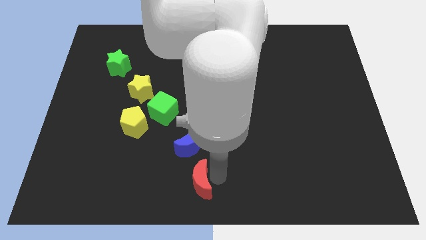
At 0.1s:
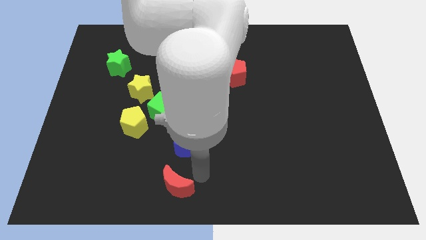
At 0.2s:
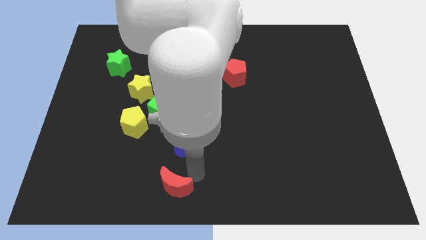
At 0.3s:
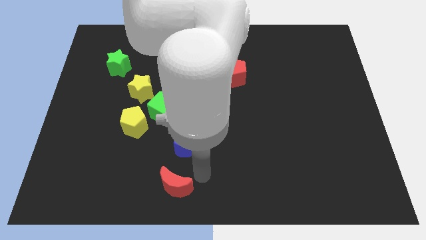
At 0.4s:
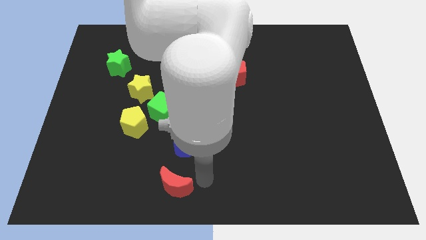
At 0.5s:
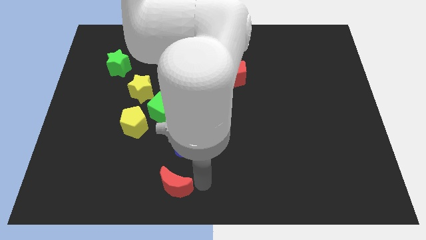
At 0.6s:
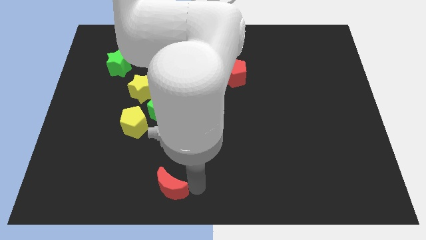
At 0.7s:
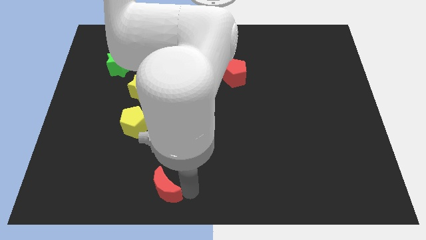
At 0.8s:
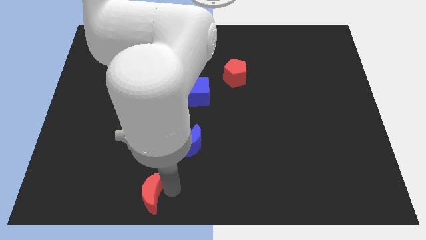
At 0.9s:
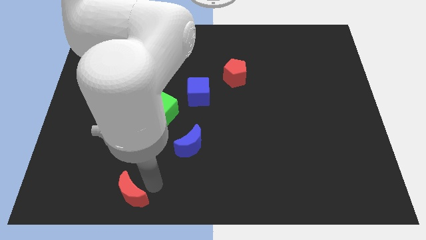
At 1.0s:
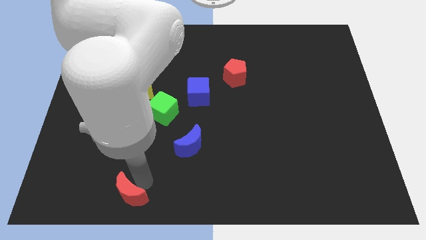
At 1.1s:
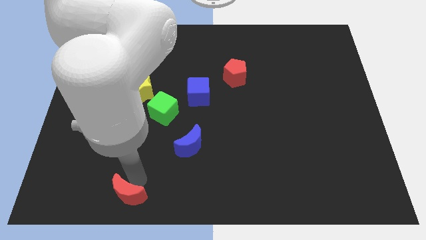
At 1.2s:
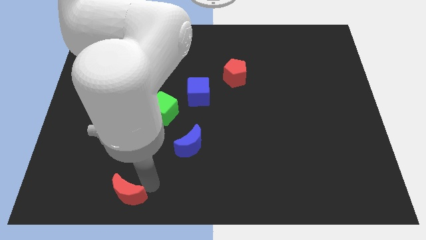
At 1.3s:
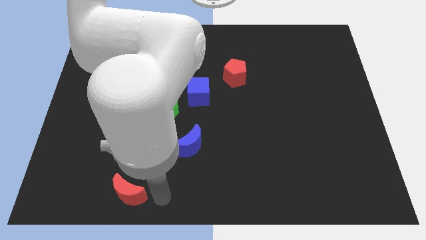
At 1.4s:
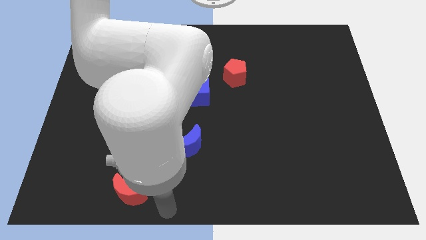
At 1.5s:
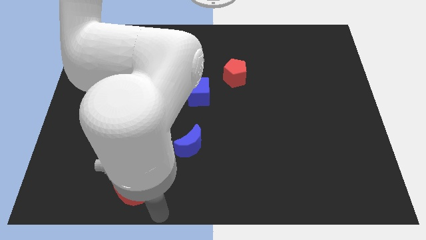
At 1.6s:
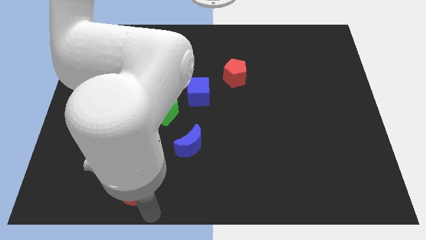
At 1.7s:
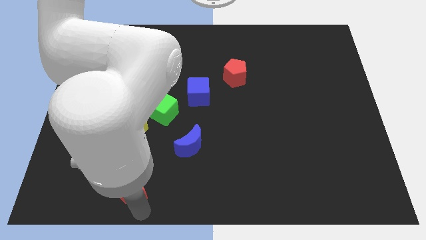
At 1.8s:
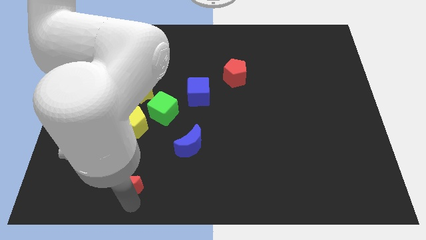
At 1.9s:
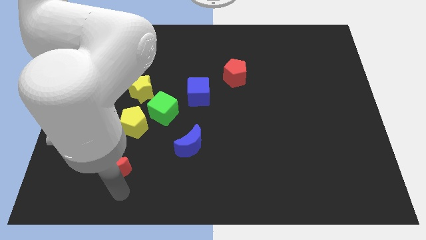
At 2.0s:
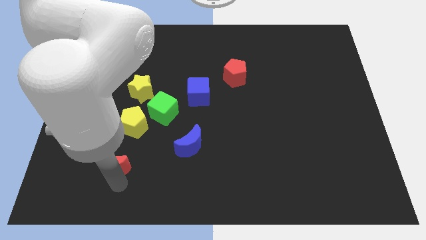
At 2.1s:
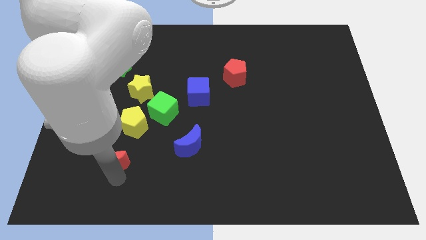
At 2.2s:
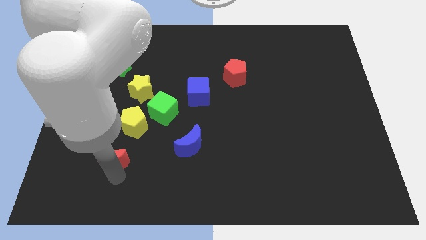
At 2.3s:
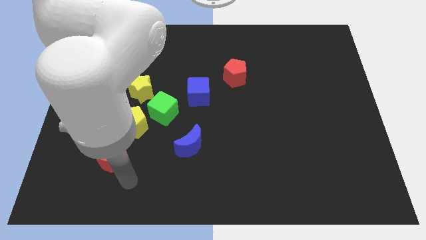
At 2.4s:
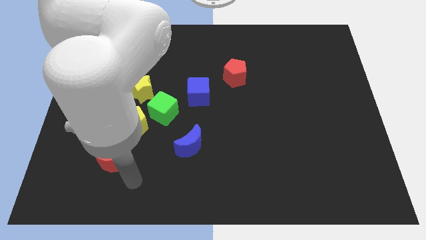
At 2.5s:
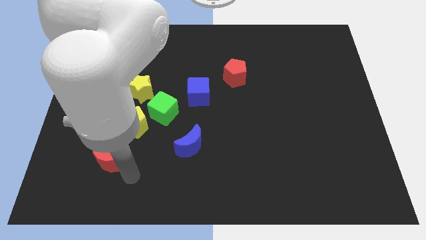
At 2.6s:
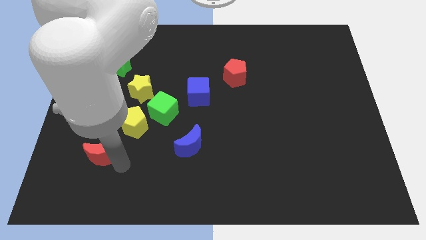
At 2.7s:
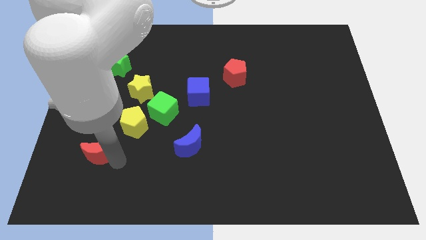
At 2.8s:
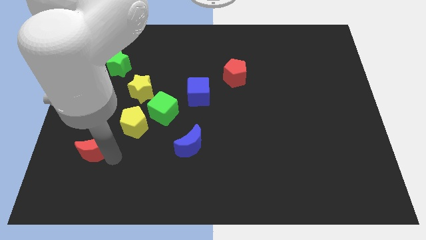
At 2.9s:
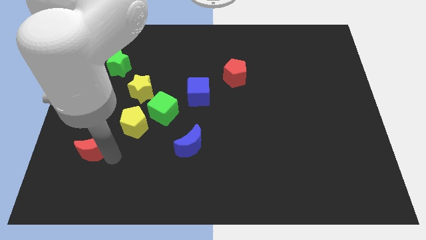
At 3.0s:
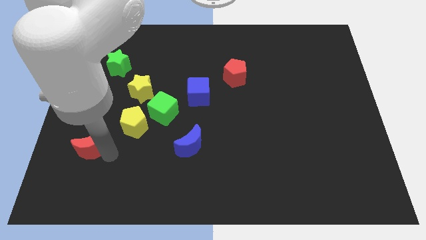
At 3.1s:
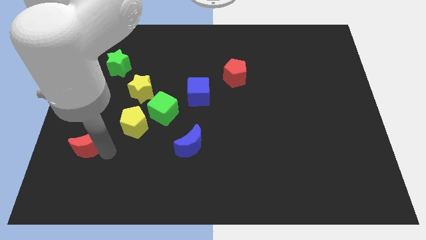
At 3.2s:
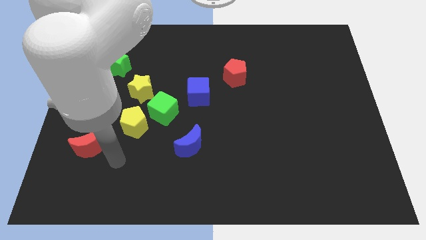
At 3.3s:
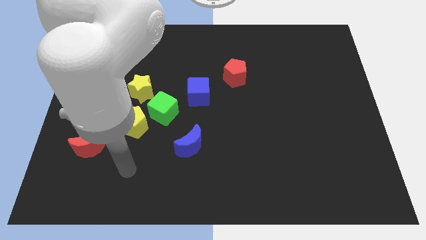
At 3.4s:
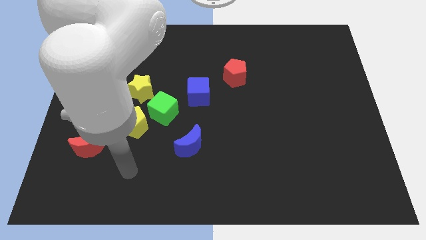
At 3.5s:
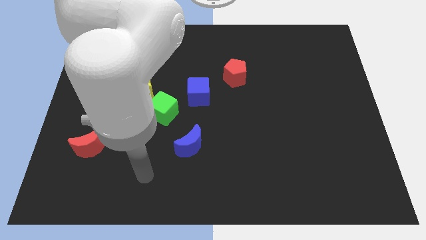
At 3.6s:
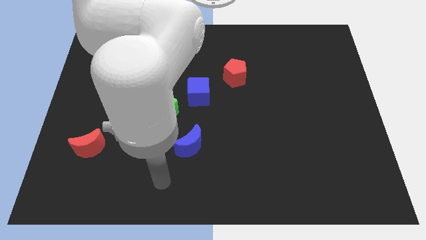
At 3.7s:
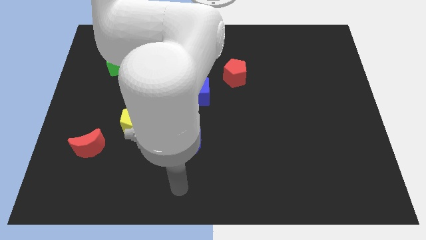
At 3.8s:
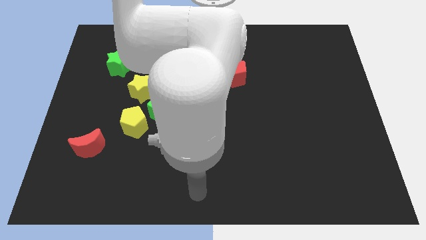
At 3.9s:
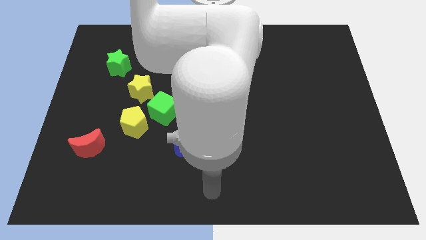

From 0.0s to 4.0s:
move the red crescent to the left of the yellow pentagon

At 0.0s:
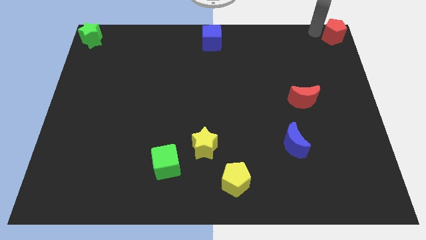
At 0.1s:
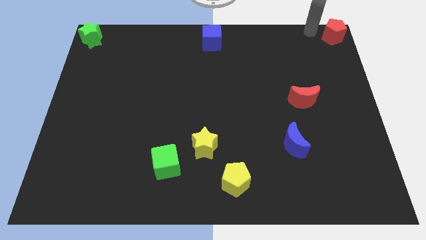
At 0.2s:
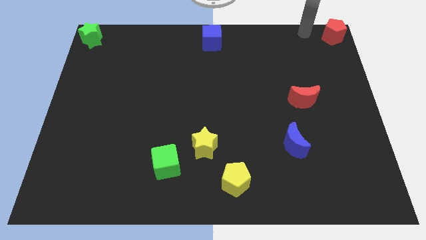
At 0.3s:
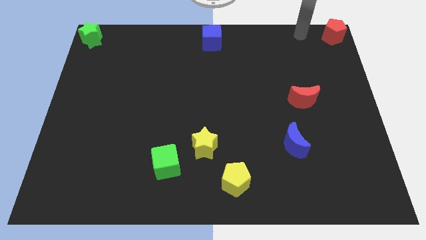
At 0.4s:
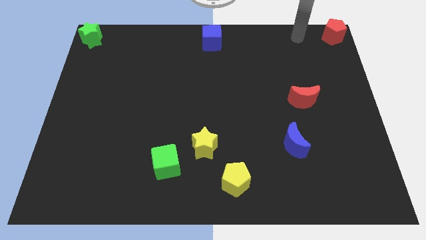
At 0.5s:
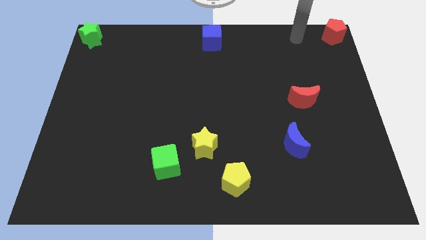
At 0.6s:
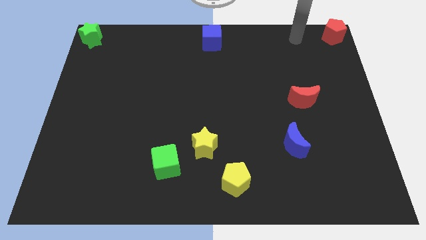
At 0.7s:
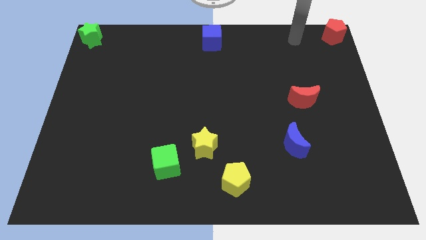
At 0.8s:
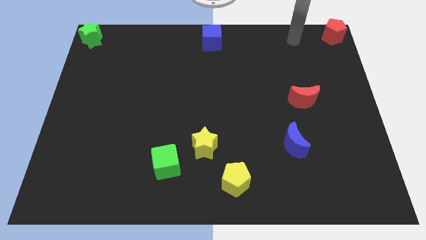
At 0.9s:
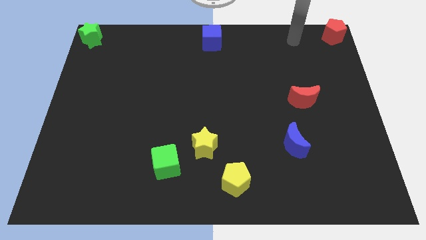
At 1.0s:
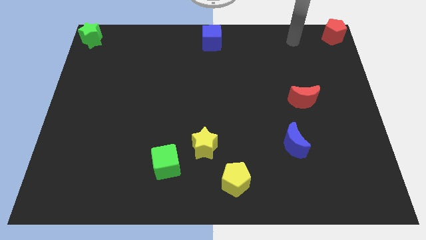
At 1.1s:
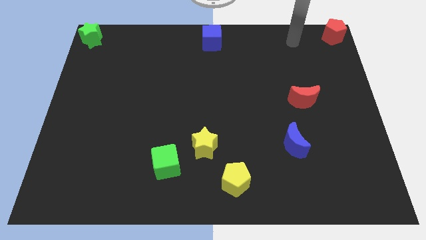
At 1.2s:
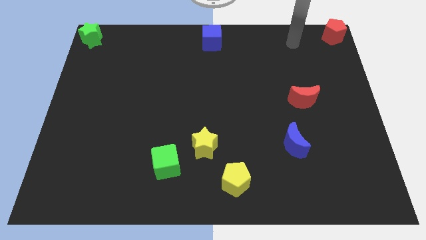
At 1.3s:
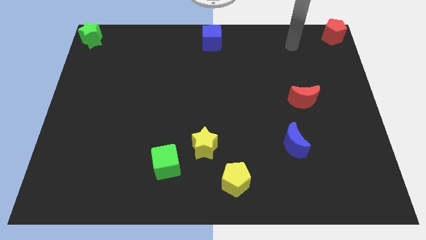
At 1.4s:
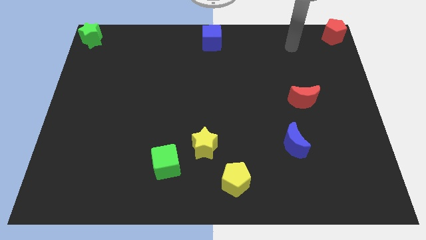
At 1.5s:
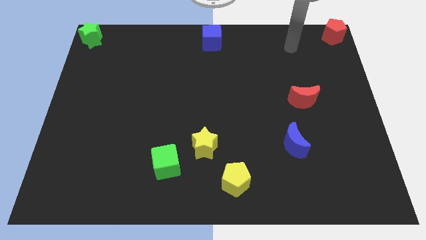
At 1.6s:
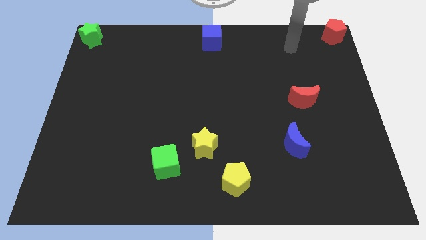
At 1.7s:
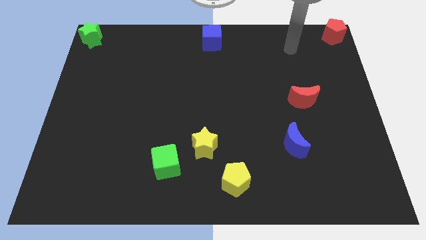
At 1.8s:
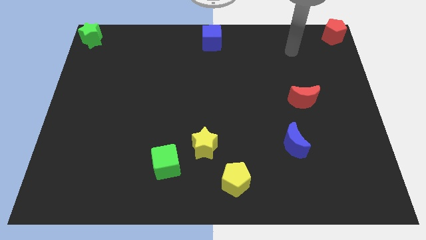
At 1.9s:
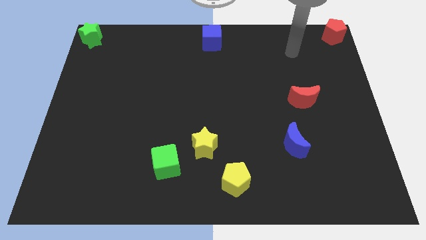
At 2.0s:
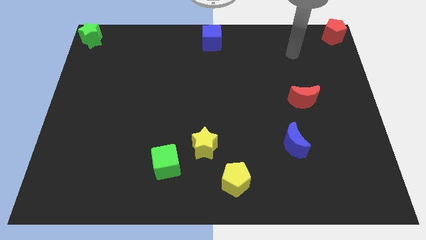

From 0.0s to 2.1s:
move the arm away from the red pentagon

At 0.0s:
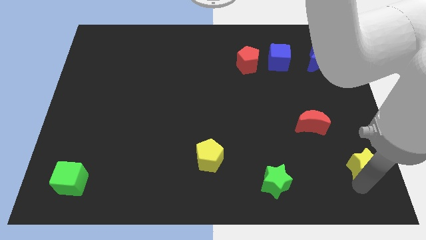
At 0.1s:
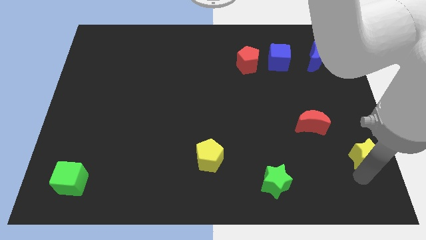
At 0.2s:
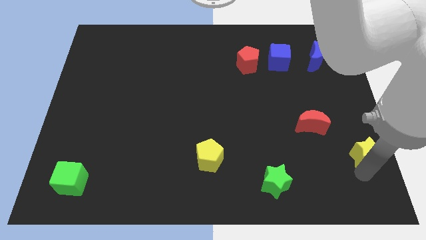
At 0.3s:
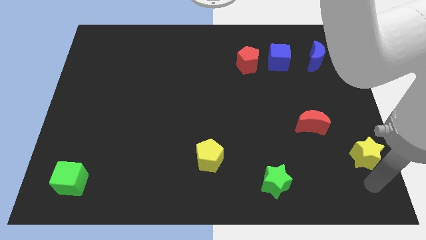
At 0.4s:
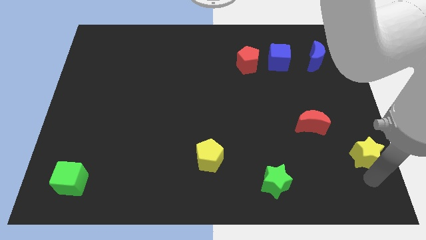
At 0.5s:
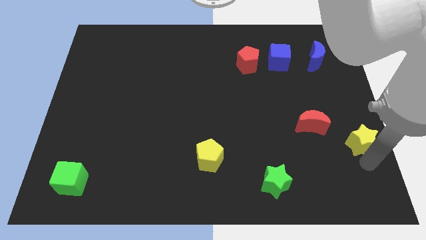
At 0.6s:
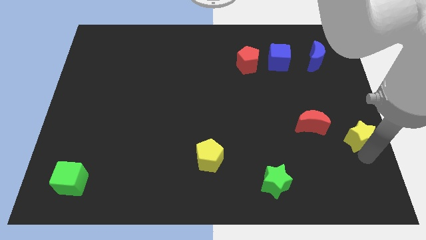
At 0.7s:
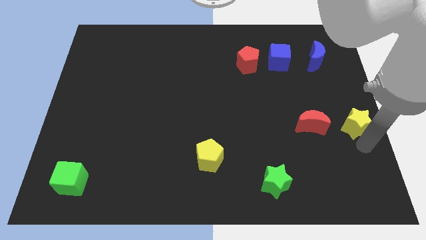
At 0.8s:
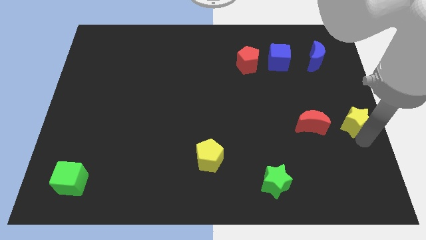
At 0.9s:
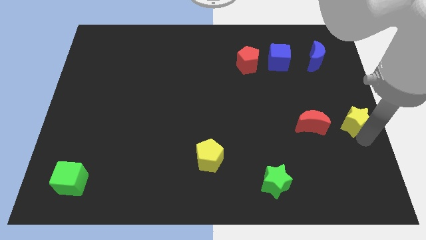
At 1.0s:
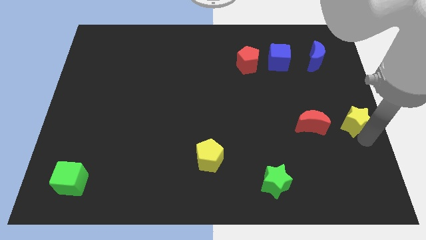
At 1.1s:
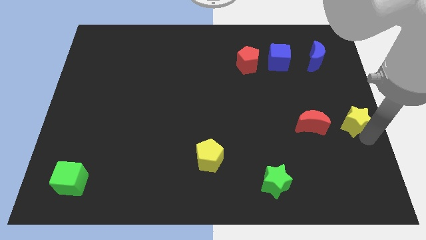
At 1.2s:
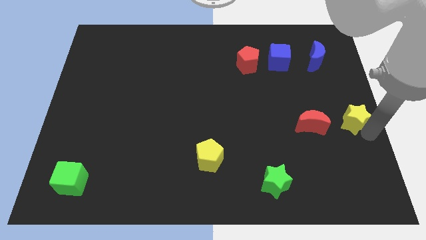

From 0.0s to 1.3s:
push the yellow star towards the center right of the board

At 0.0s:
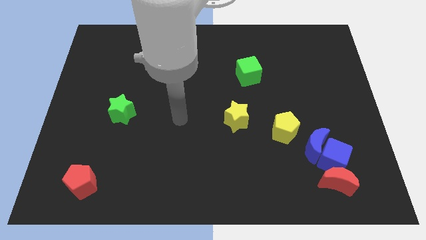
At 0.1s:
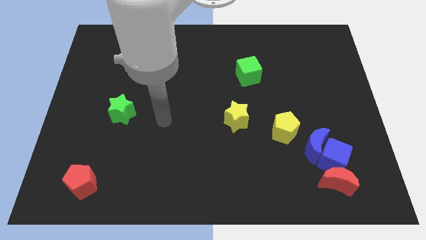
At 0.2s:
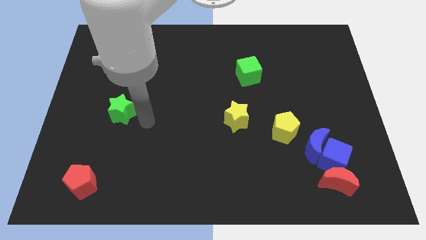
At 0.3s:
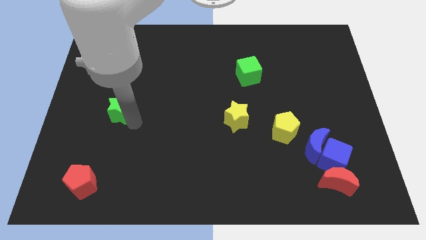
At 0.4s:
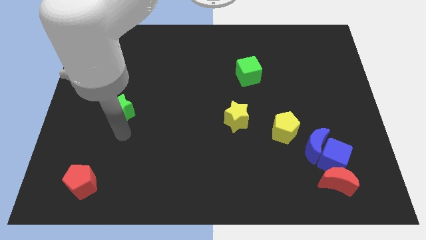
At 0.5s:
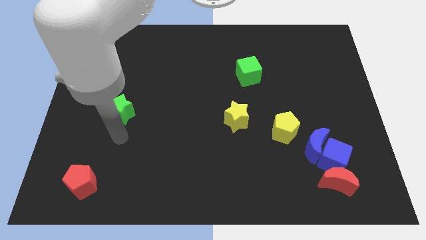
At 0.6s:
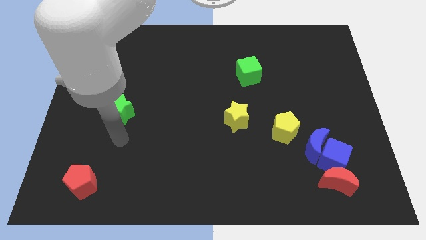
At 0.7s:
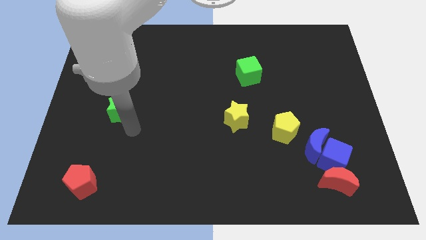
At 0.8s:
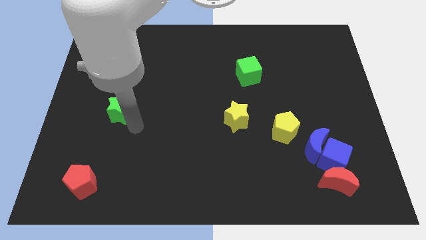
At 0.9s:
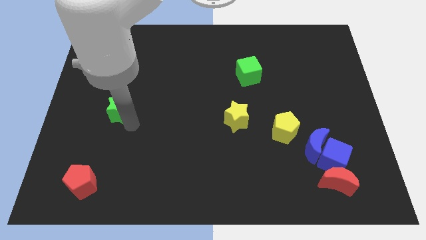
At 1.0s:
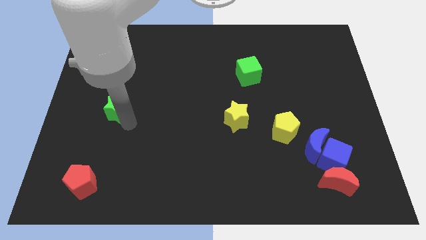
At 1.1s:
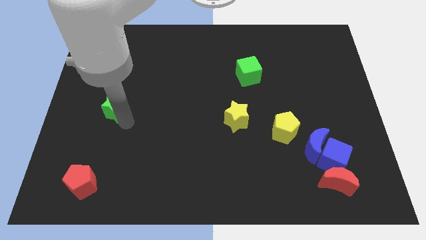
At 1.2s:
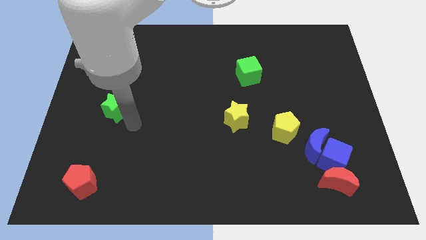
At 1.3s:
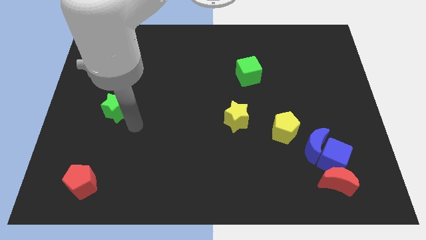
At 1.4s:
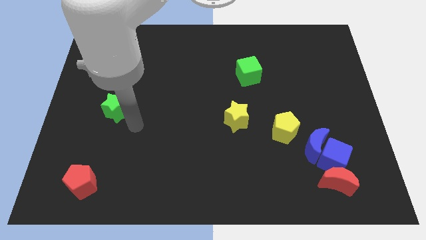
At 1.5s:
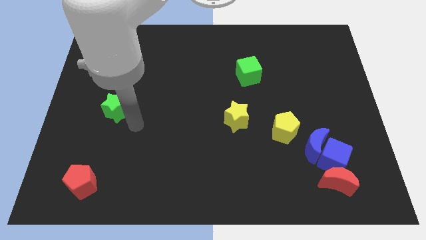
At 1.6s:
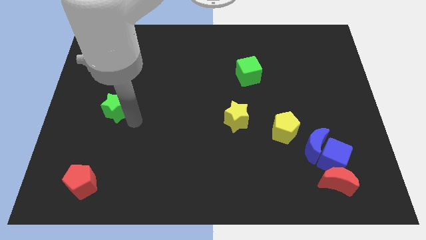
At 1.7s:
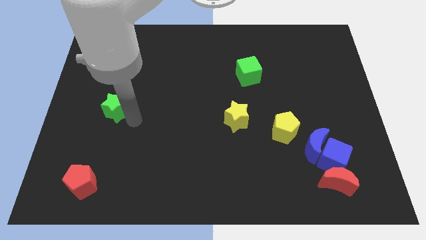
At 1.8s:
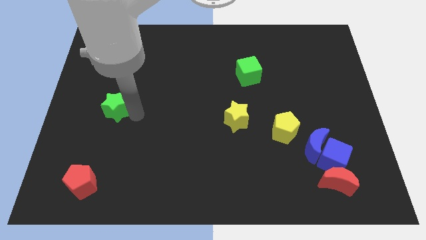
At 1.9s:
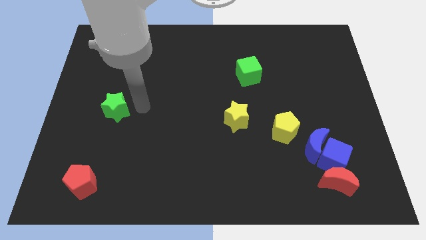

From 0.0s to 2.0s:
move the green star slightly to the left side of the board
